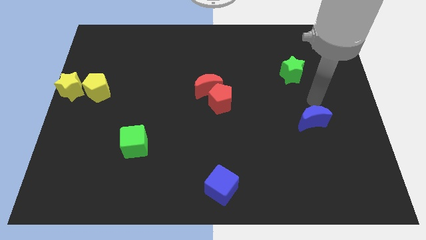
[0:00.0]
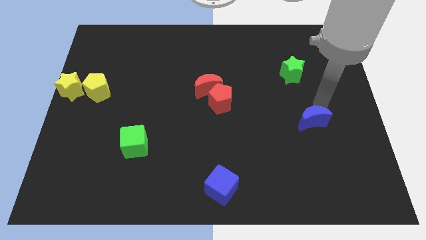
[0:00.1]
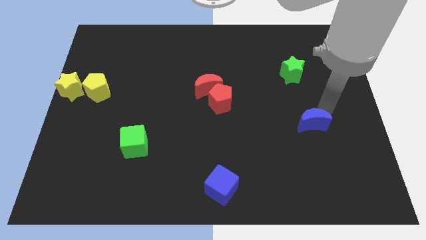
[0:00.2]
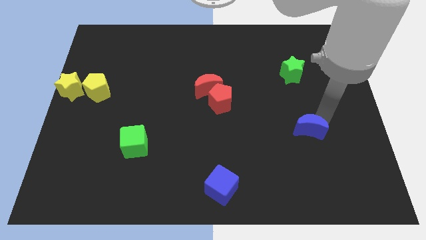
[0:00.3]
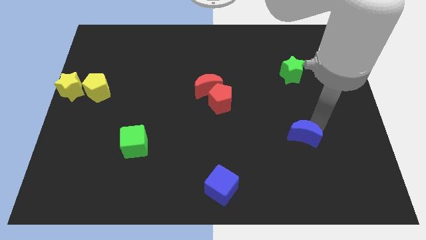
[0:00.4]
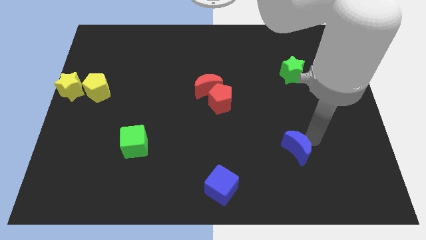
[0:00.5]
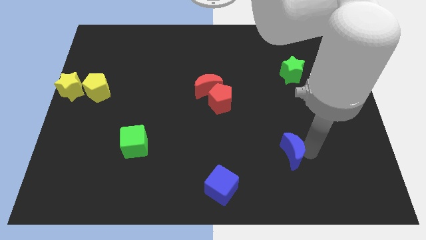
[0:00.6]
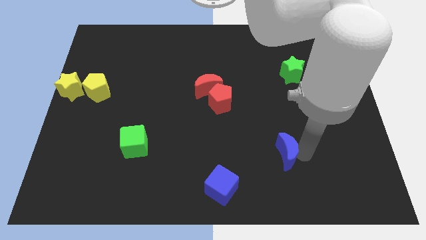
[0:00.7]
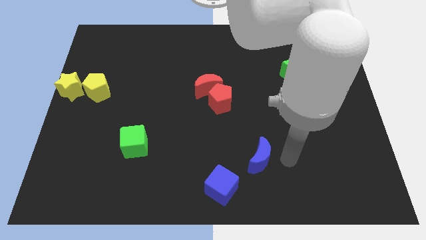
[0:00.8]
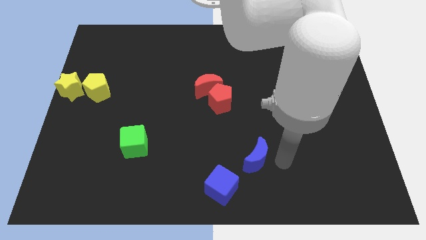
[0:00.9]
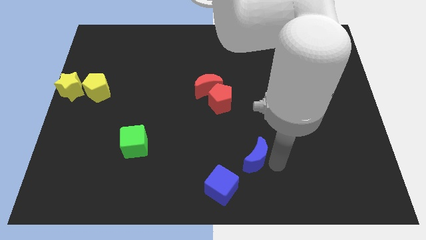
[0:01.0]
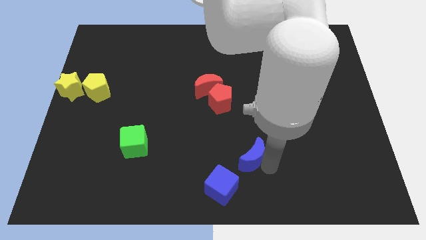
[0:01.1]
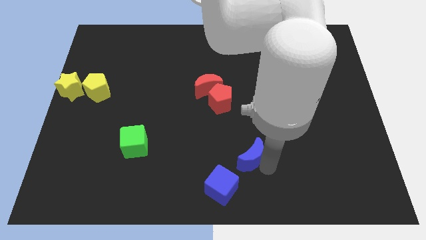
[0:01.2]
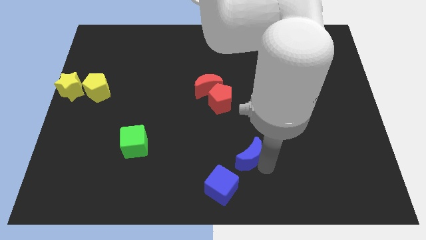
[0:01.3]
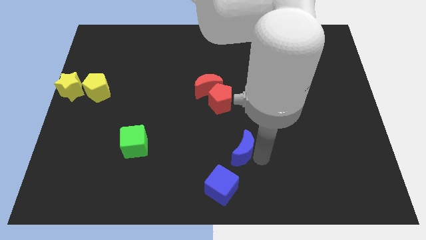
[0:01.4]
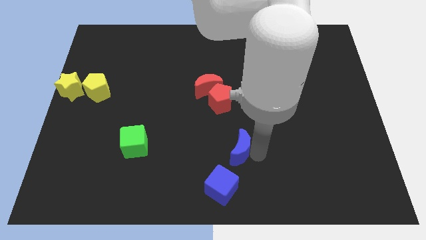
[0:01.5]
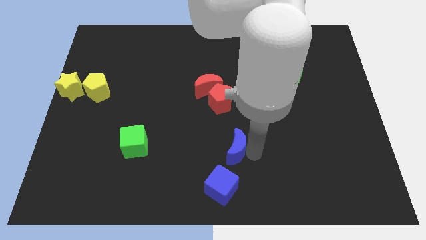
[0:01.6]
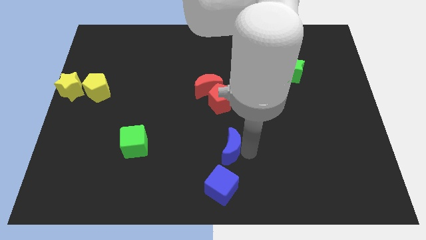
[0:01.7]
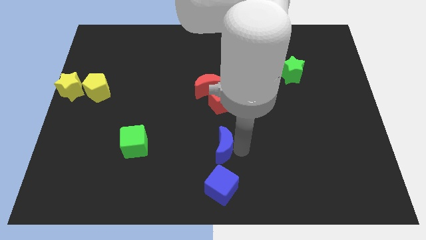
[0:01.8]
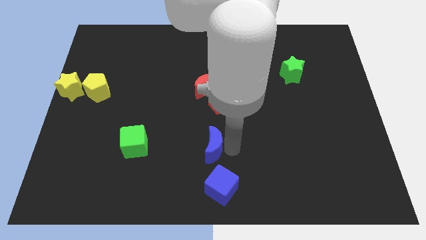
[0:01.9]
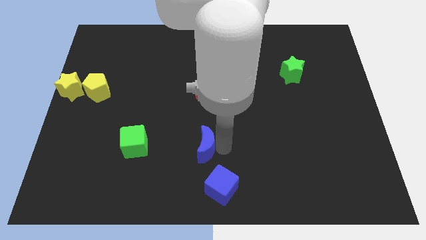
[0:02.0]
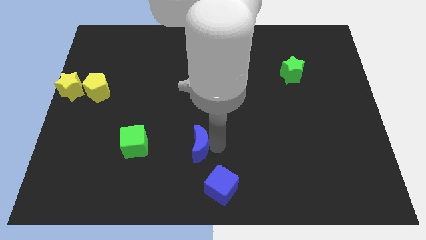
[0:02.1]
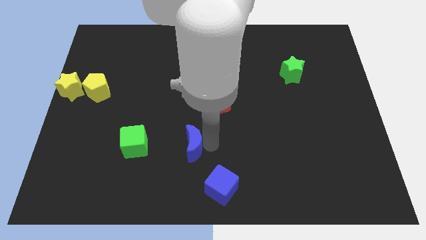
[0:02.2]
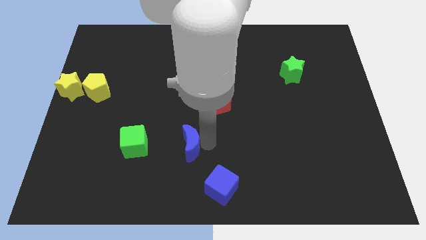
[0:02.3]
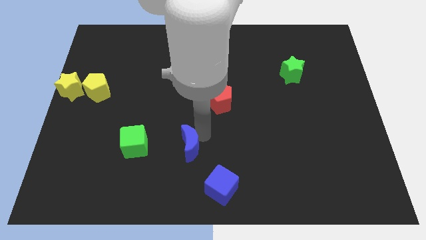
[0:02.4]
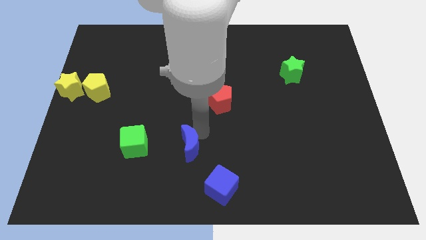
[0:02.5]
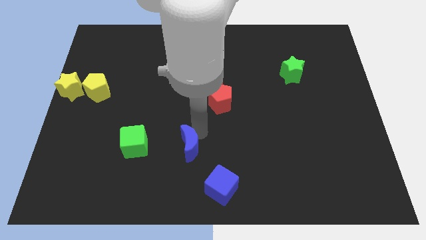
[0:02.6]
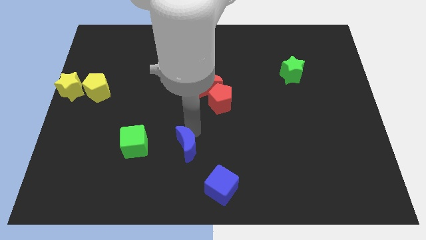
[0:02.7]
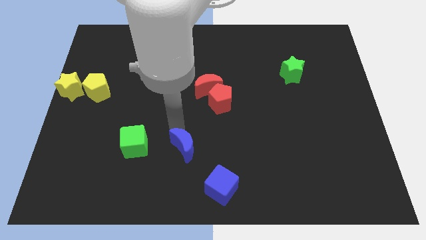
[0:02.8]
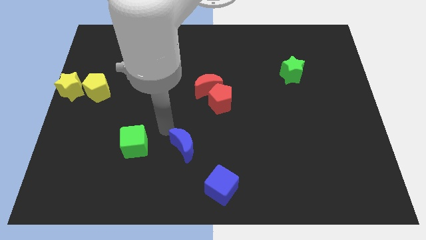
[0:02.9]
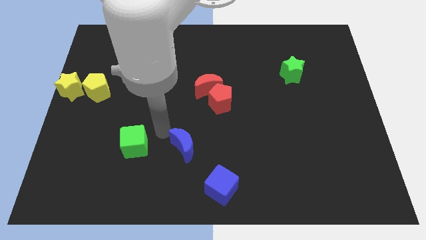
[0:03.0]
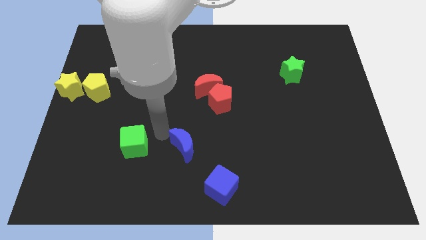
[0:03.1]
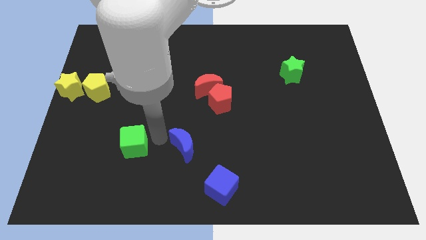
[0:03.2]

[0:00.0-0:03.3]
push the blue moon to the right side of the green cube

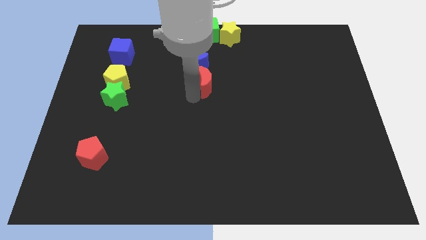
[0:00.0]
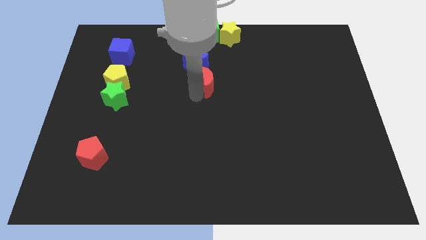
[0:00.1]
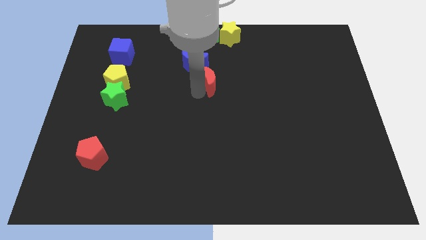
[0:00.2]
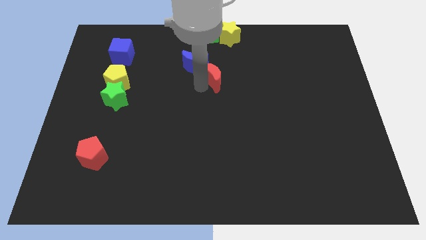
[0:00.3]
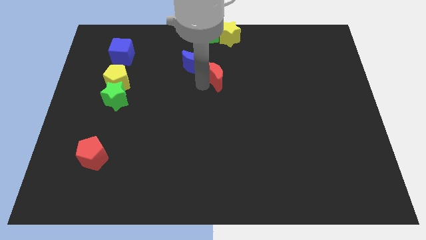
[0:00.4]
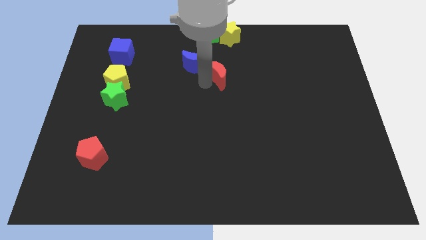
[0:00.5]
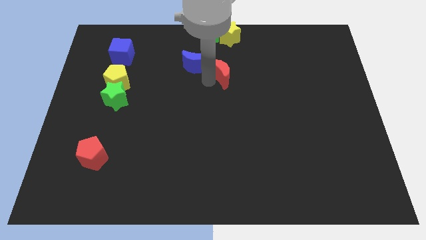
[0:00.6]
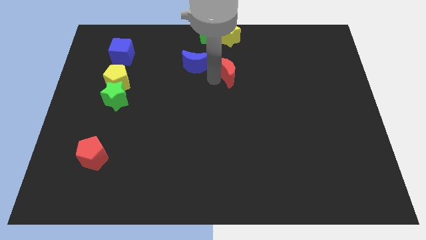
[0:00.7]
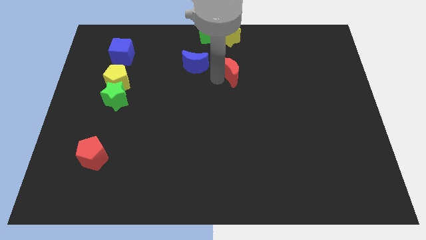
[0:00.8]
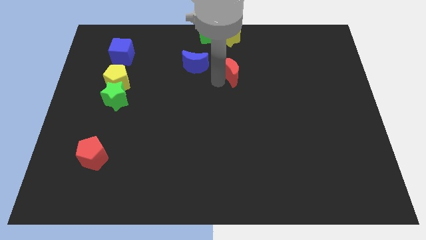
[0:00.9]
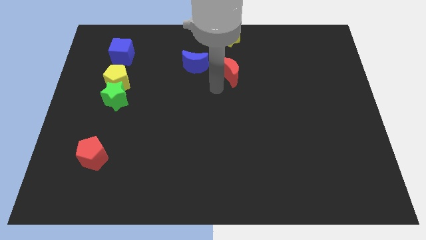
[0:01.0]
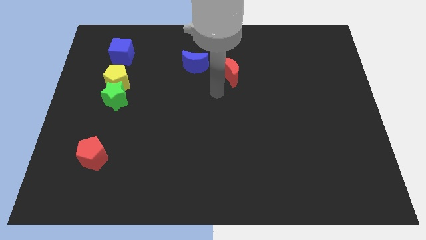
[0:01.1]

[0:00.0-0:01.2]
push the red crescent towards the right side of the left crescent

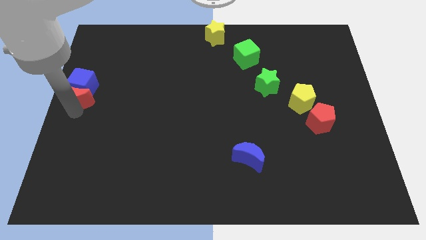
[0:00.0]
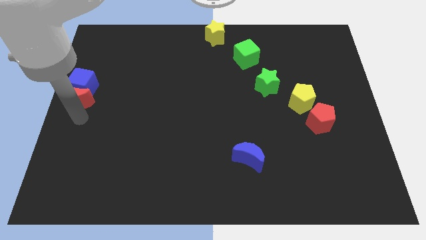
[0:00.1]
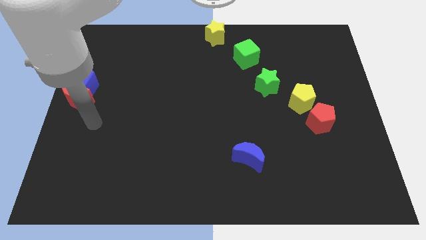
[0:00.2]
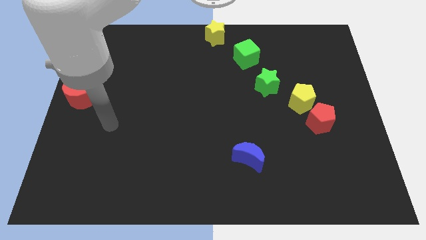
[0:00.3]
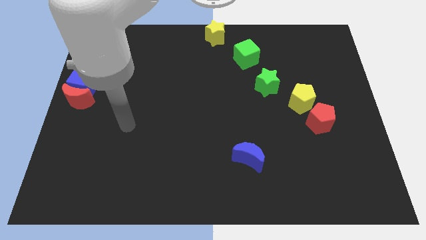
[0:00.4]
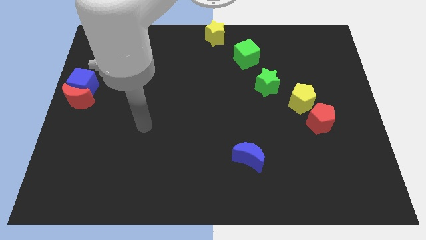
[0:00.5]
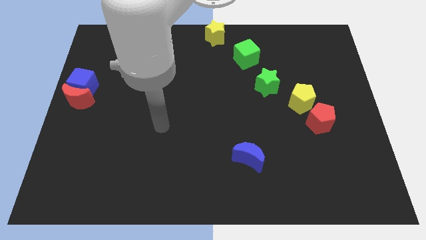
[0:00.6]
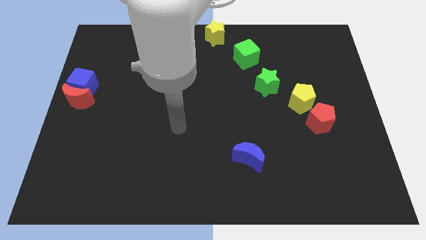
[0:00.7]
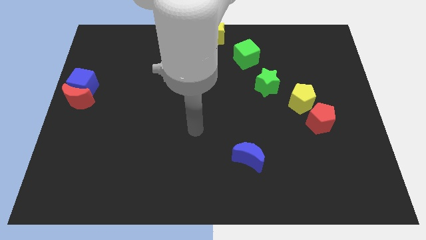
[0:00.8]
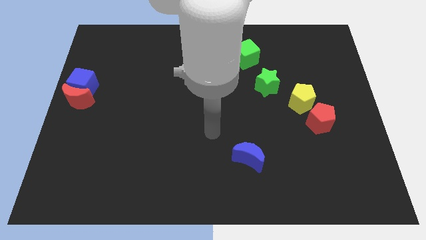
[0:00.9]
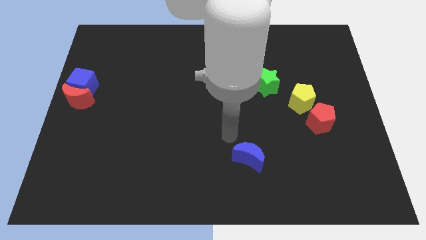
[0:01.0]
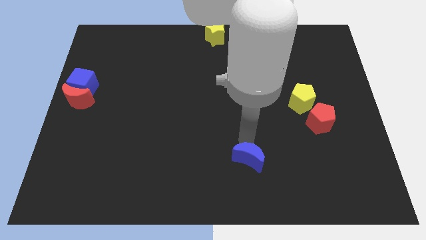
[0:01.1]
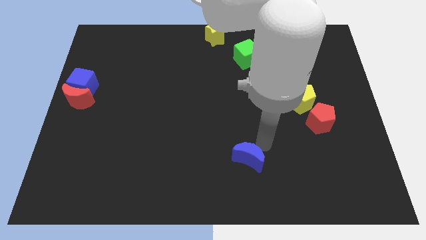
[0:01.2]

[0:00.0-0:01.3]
move the arm to the top of the blue moon

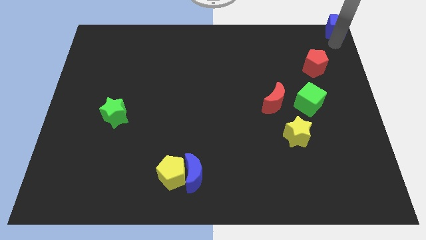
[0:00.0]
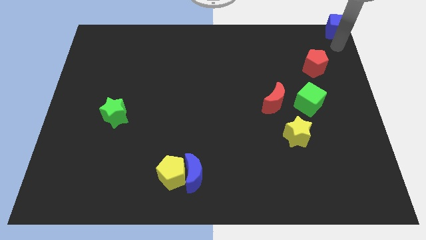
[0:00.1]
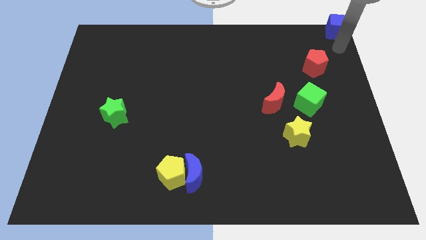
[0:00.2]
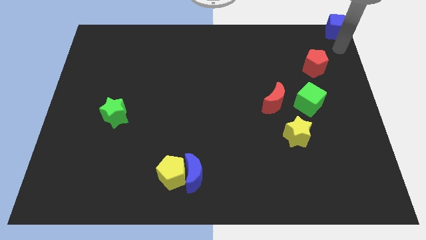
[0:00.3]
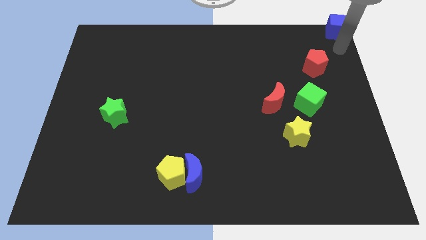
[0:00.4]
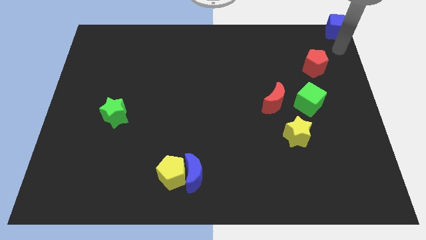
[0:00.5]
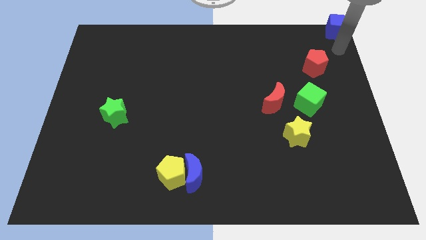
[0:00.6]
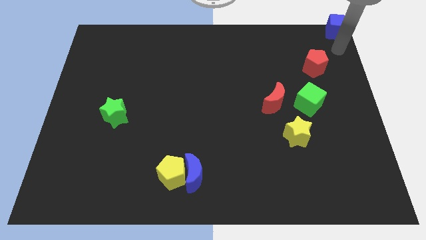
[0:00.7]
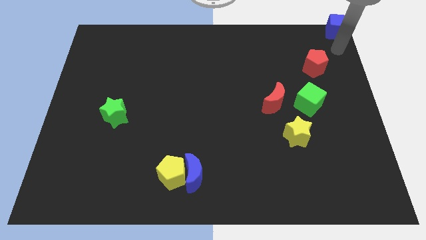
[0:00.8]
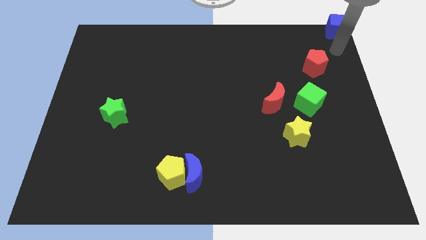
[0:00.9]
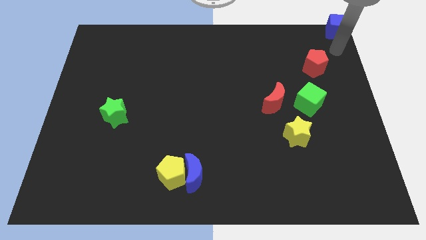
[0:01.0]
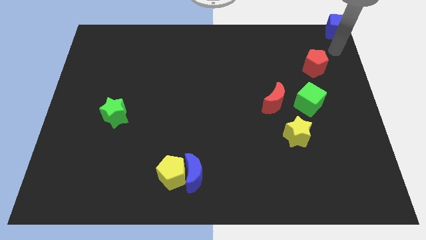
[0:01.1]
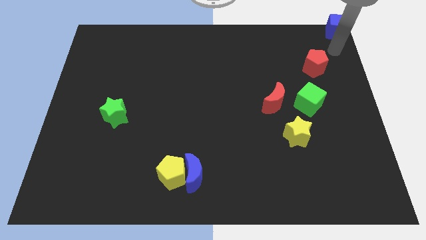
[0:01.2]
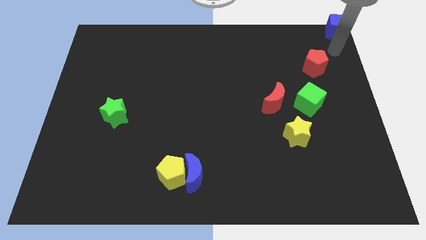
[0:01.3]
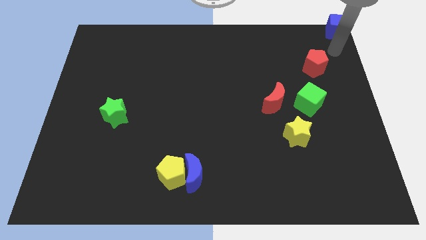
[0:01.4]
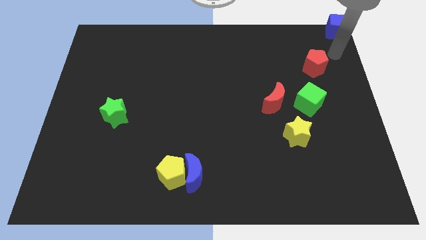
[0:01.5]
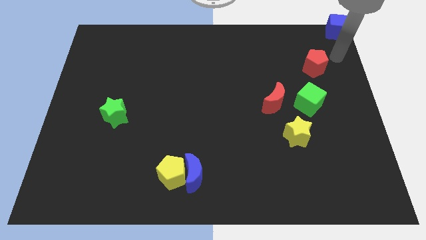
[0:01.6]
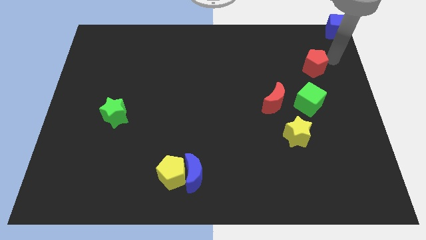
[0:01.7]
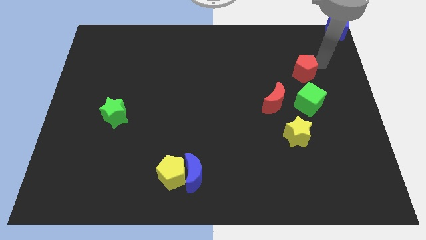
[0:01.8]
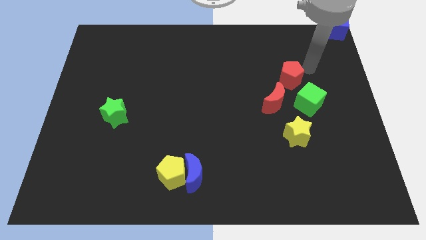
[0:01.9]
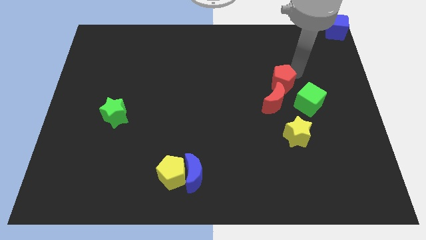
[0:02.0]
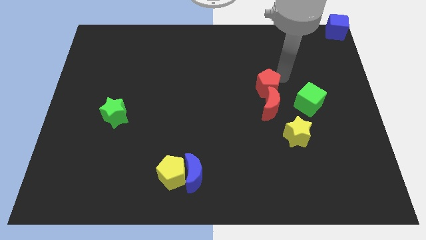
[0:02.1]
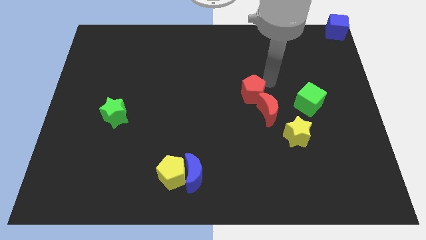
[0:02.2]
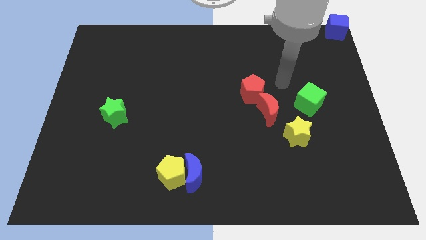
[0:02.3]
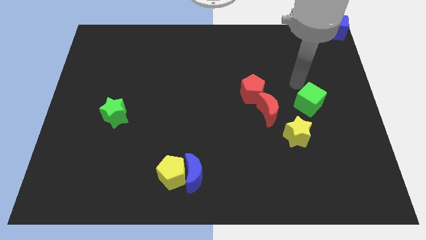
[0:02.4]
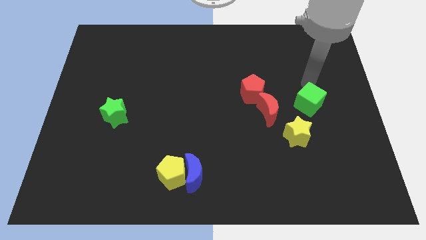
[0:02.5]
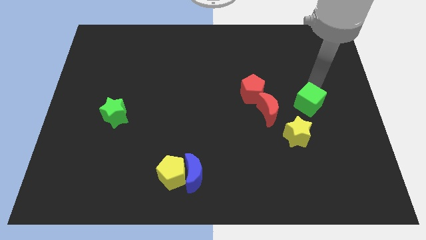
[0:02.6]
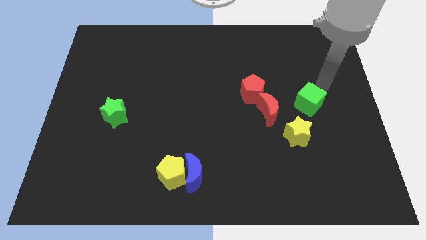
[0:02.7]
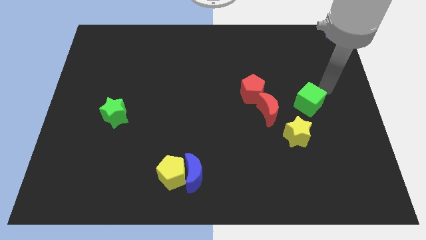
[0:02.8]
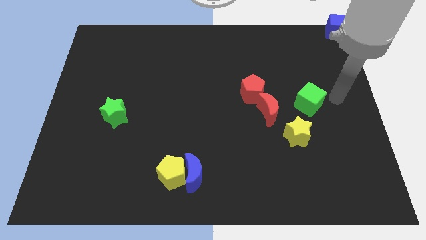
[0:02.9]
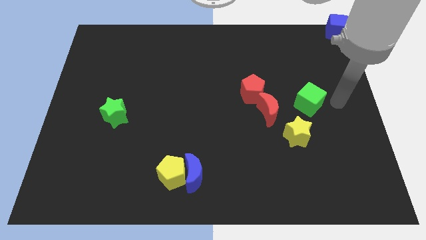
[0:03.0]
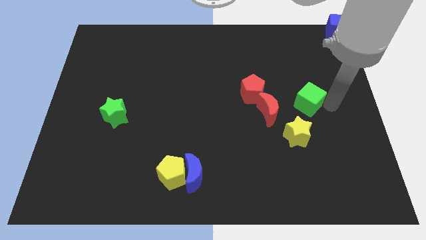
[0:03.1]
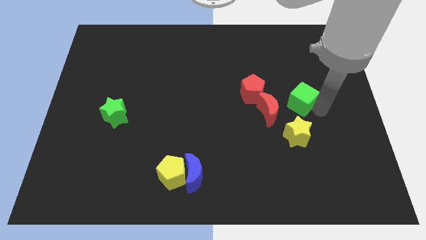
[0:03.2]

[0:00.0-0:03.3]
push the red pentagon towards the center
